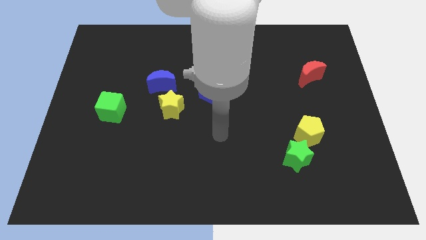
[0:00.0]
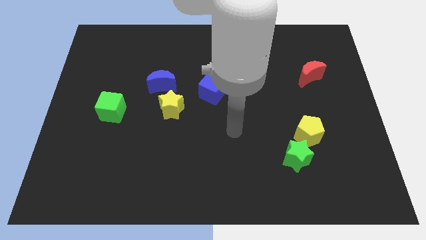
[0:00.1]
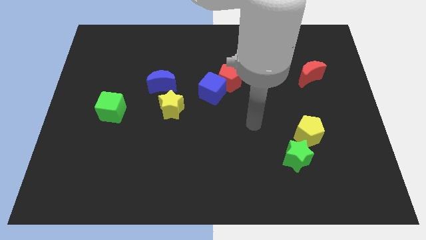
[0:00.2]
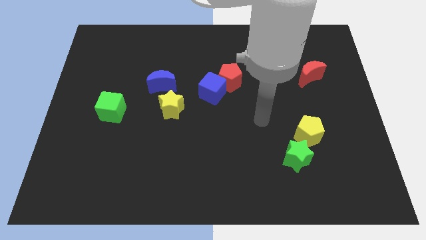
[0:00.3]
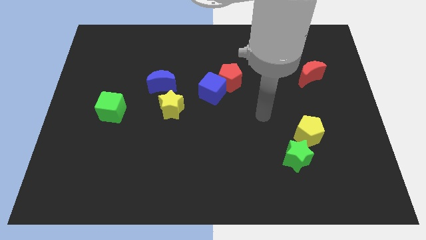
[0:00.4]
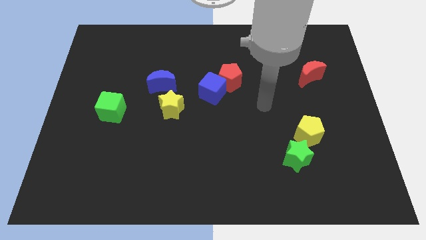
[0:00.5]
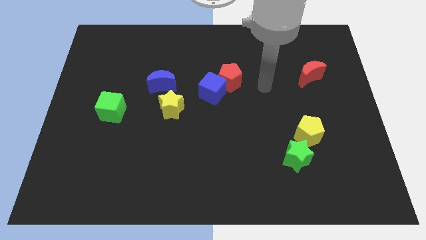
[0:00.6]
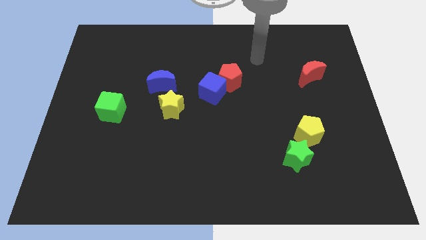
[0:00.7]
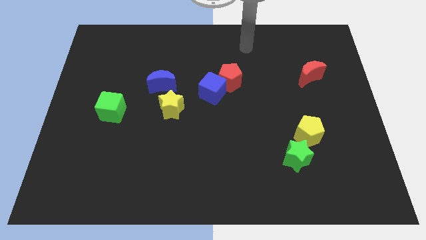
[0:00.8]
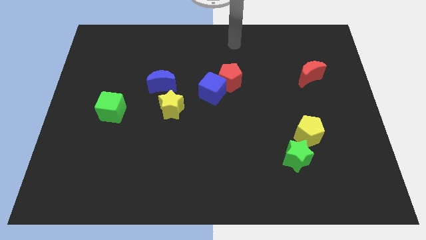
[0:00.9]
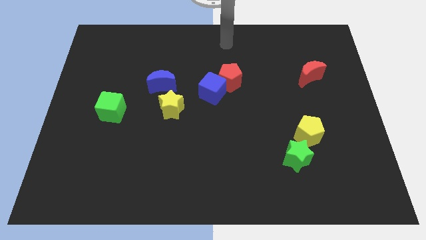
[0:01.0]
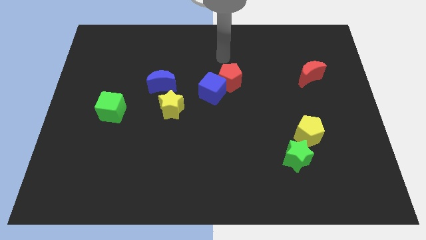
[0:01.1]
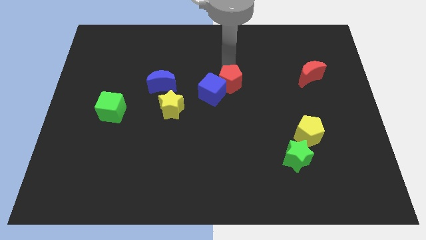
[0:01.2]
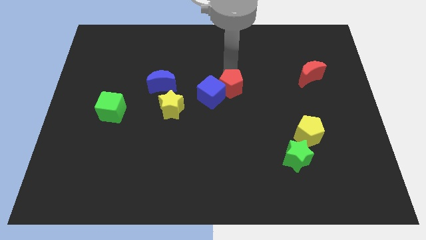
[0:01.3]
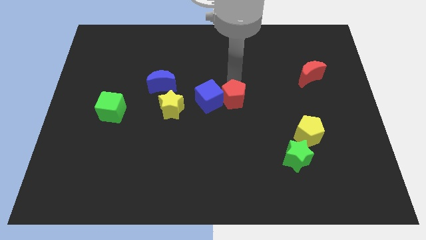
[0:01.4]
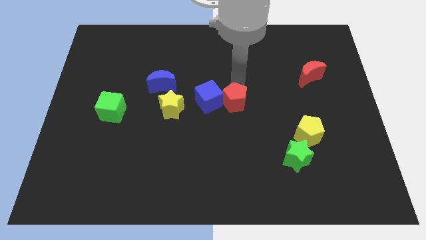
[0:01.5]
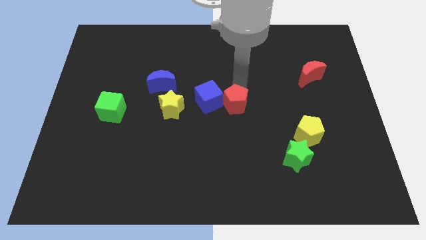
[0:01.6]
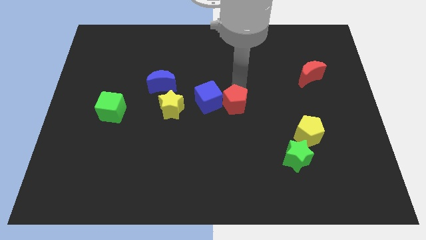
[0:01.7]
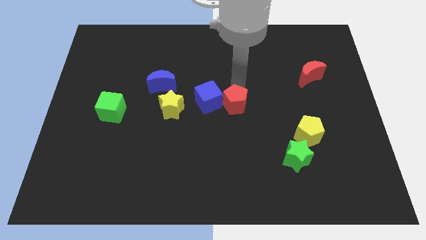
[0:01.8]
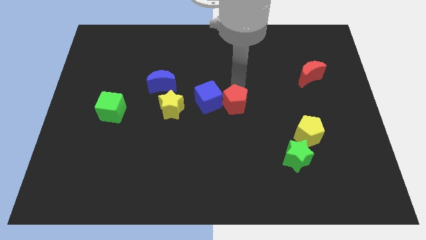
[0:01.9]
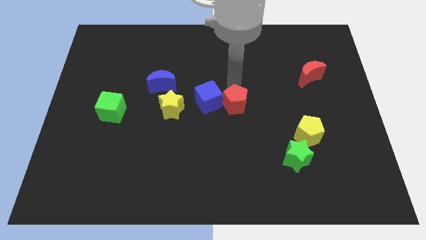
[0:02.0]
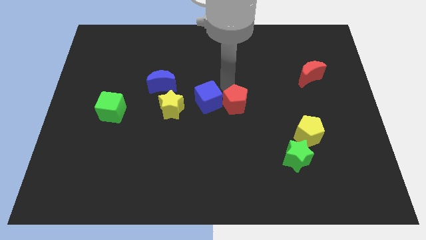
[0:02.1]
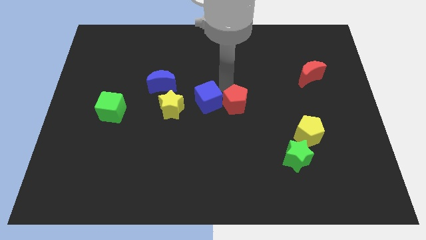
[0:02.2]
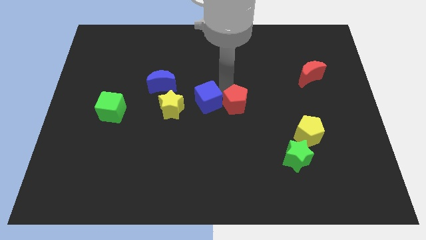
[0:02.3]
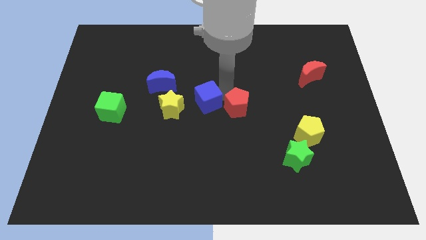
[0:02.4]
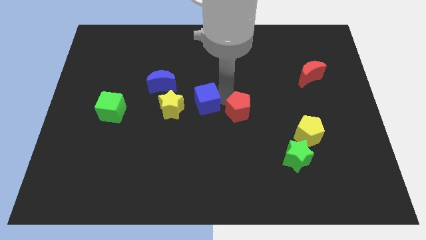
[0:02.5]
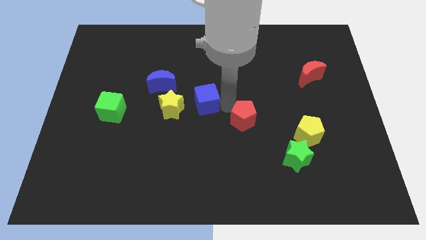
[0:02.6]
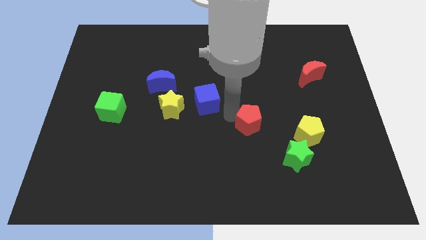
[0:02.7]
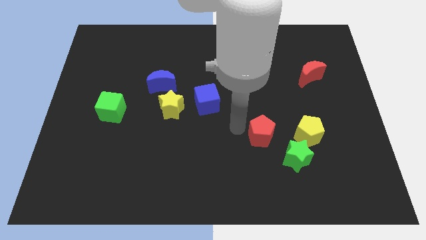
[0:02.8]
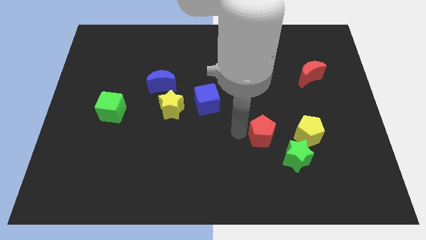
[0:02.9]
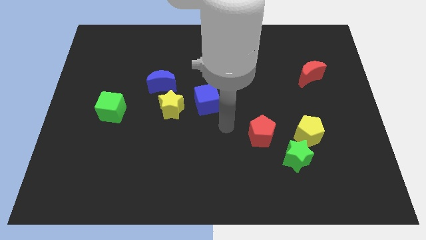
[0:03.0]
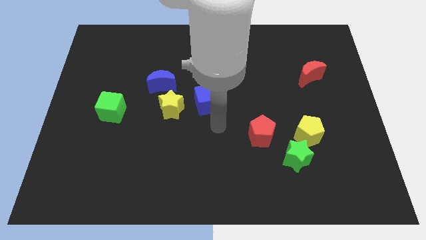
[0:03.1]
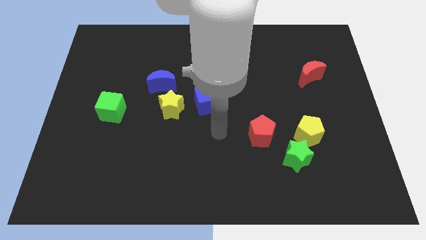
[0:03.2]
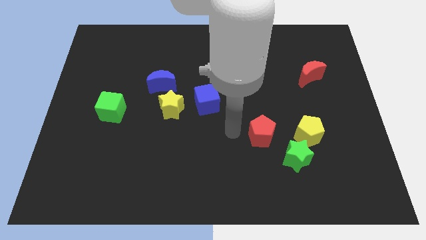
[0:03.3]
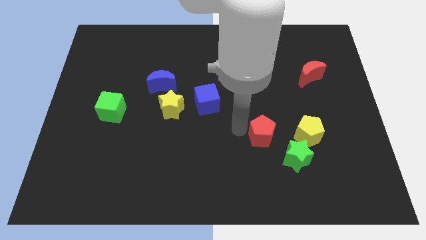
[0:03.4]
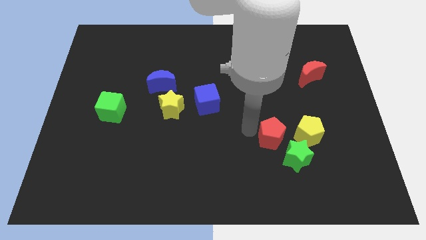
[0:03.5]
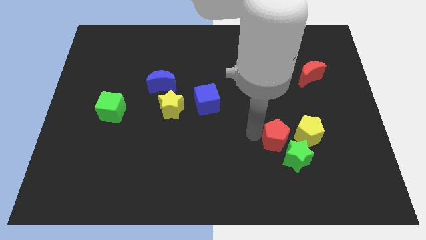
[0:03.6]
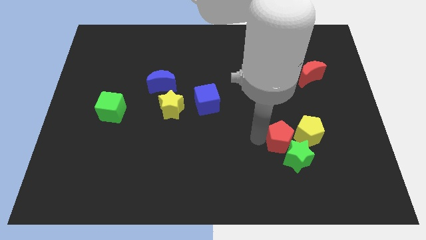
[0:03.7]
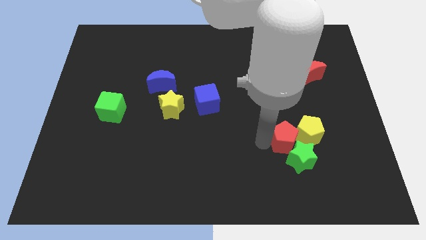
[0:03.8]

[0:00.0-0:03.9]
move the red pentagon towards the green star

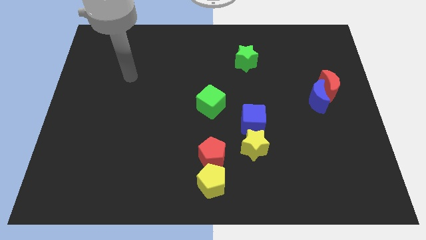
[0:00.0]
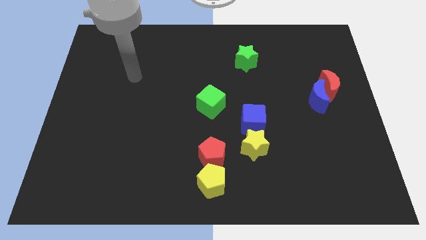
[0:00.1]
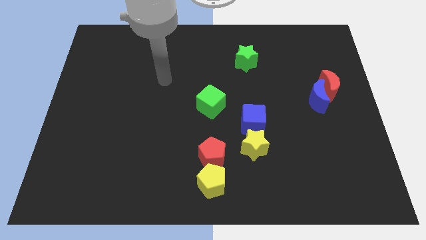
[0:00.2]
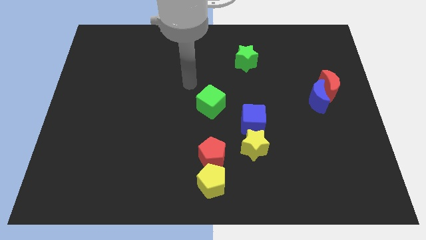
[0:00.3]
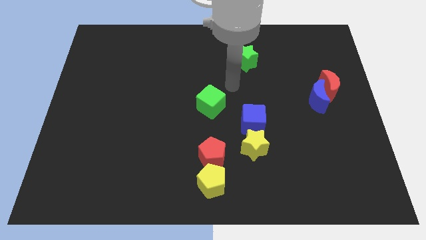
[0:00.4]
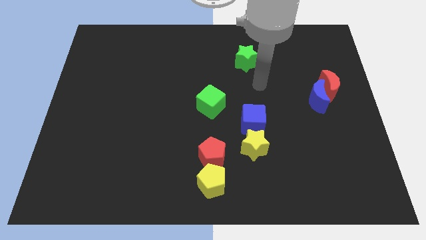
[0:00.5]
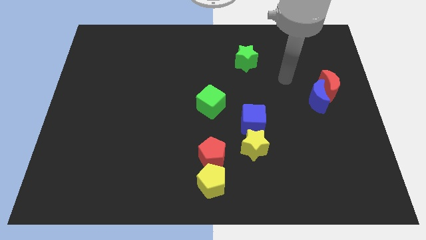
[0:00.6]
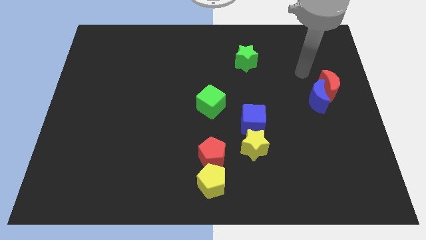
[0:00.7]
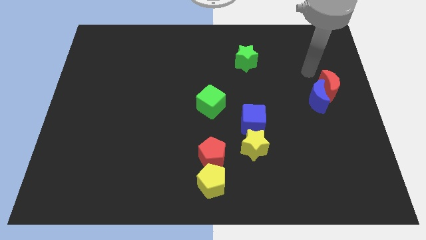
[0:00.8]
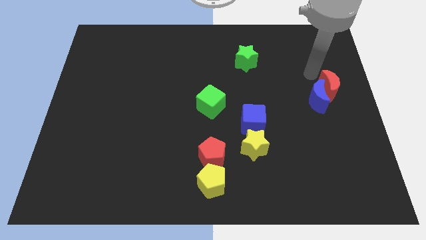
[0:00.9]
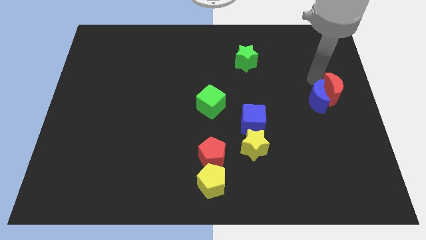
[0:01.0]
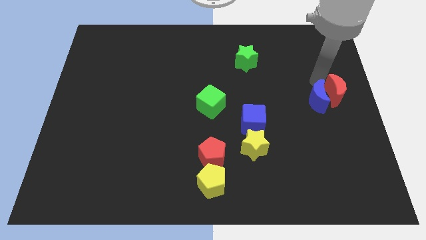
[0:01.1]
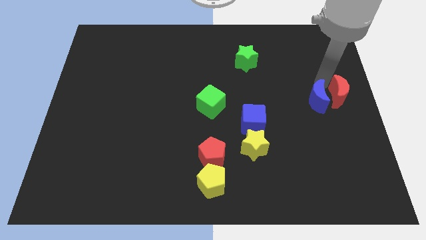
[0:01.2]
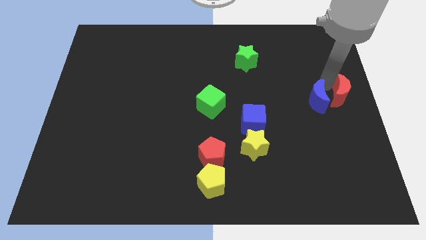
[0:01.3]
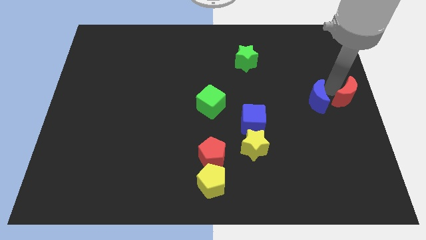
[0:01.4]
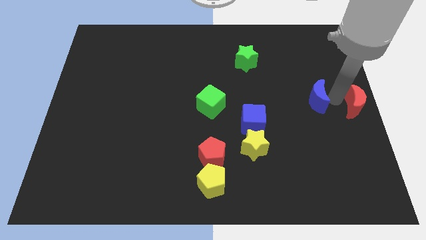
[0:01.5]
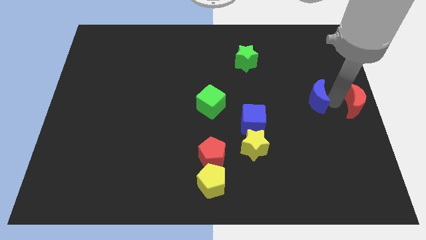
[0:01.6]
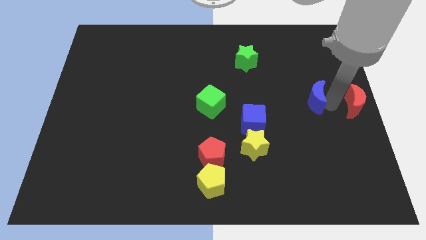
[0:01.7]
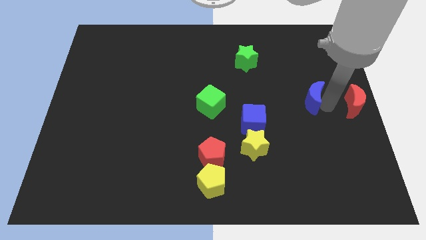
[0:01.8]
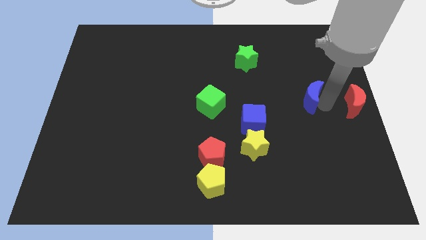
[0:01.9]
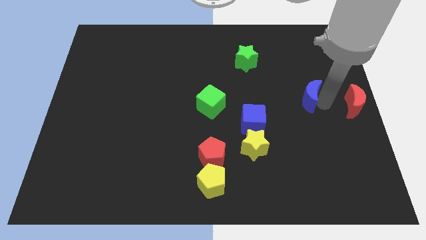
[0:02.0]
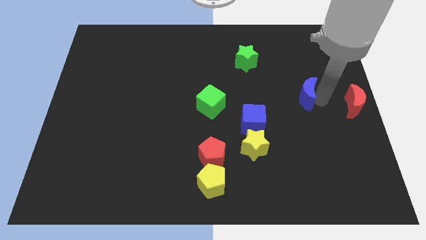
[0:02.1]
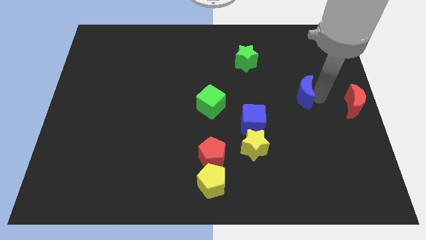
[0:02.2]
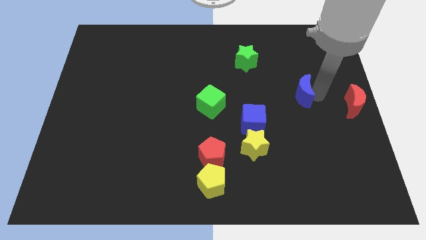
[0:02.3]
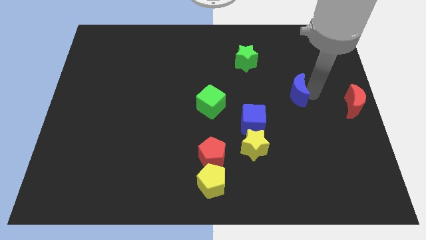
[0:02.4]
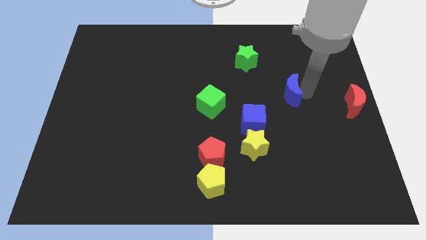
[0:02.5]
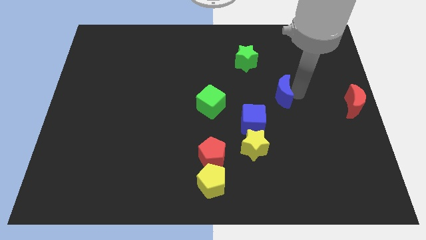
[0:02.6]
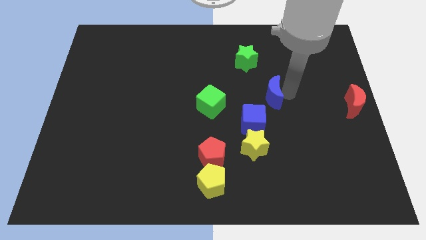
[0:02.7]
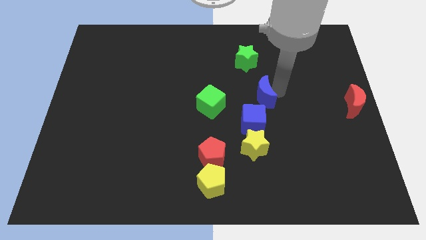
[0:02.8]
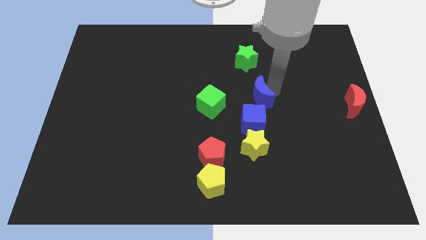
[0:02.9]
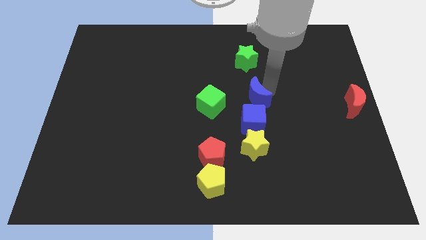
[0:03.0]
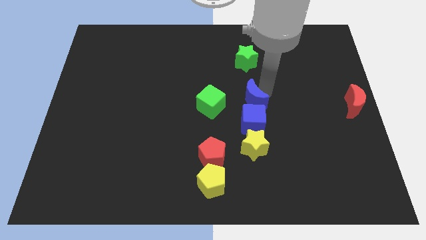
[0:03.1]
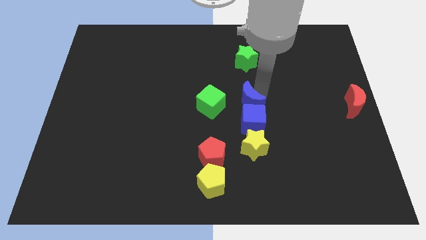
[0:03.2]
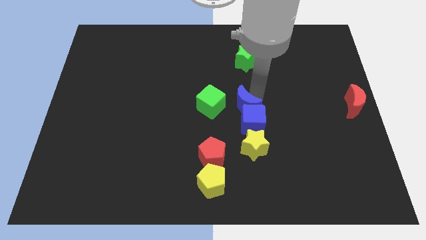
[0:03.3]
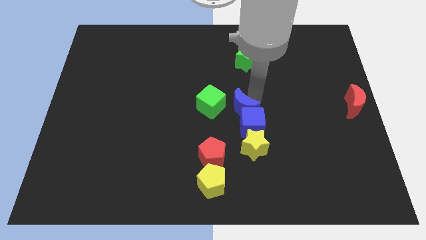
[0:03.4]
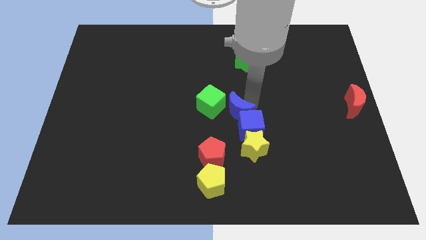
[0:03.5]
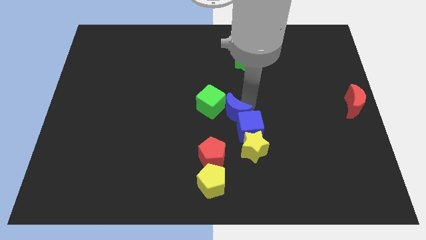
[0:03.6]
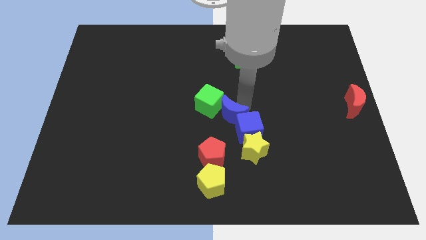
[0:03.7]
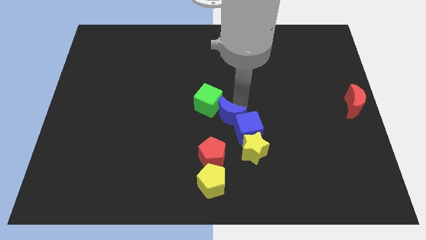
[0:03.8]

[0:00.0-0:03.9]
slide the blue moon close to the green cube

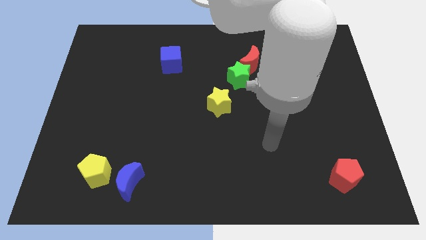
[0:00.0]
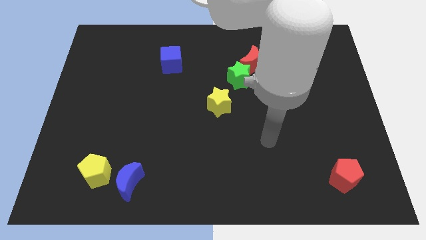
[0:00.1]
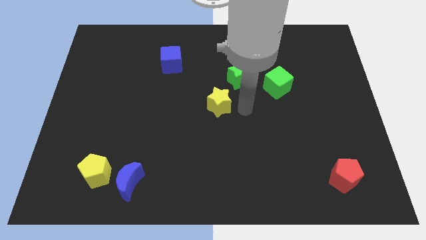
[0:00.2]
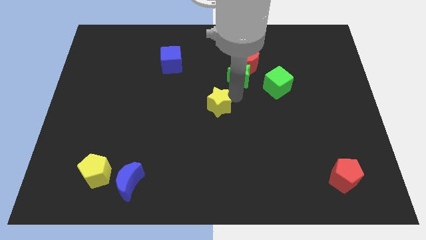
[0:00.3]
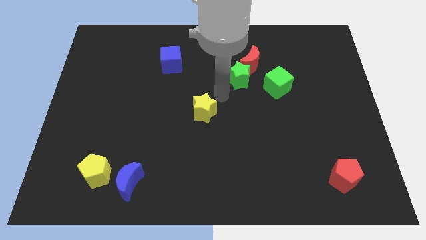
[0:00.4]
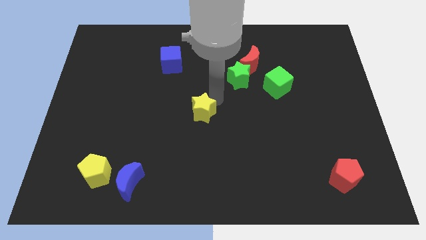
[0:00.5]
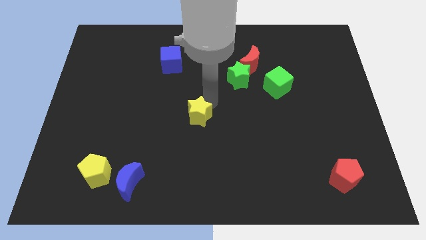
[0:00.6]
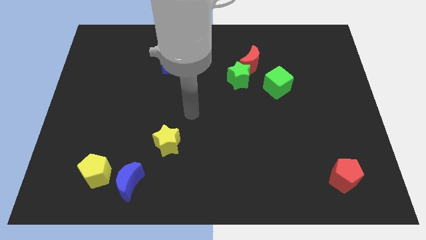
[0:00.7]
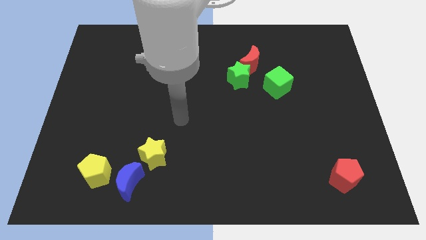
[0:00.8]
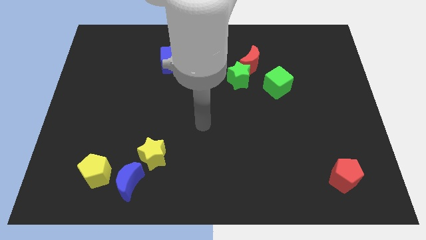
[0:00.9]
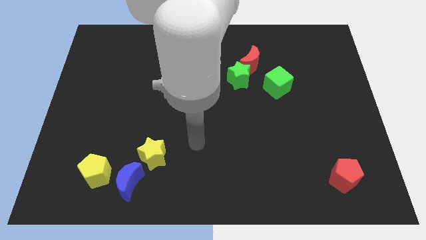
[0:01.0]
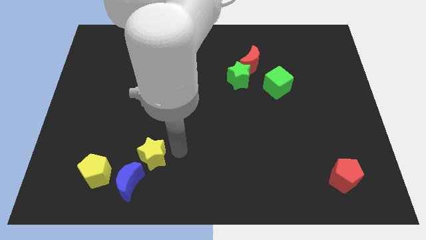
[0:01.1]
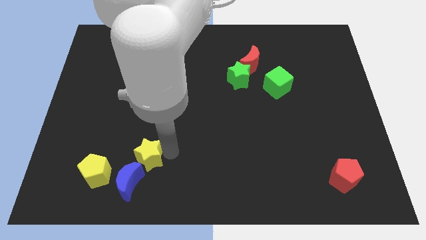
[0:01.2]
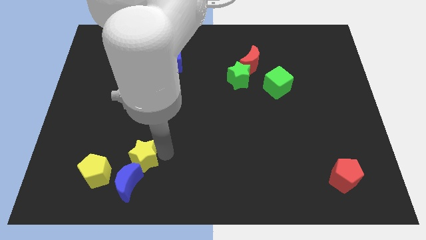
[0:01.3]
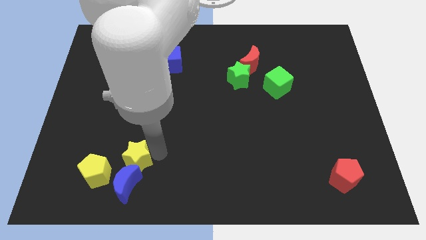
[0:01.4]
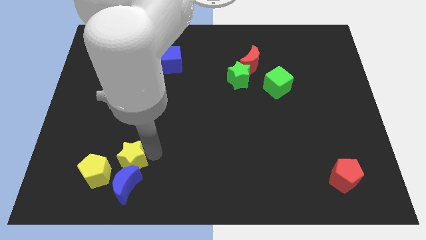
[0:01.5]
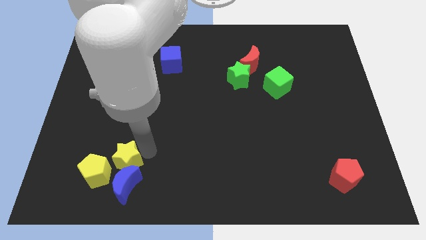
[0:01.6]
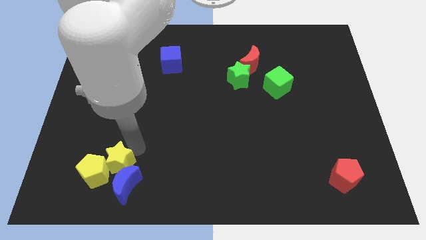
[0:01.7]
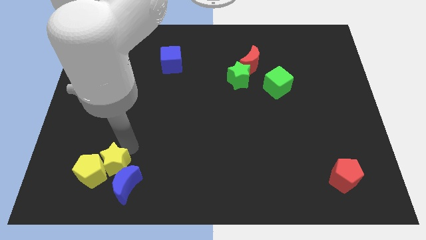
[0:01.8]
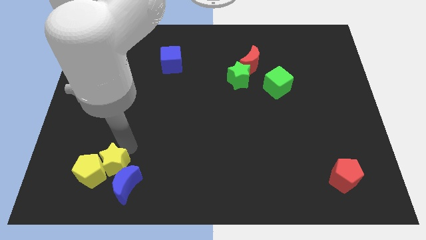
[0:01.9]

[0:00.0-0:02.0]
move the yellow star towards the yellow pentagon
